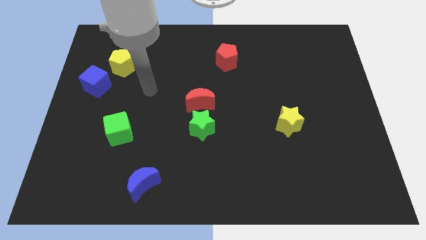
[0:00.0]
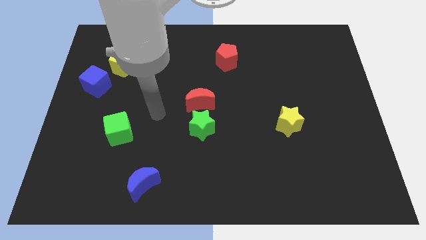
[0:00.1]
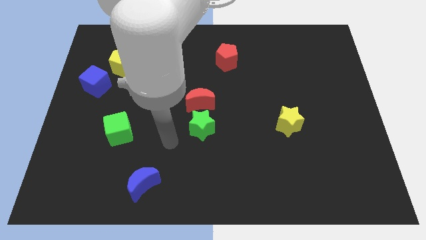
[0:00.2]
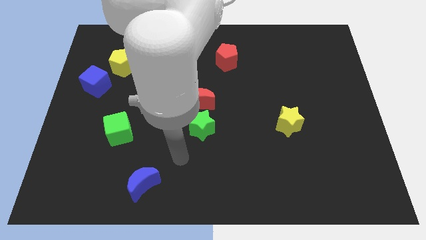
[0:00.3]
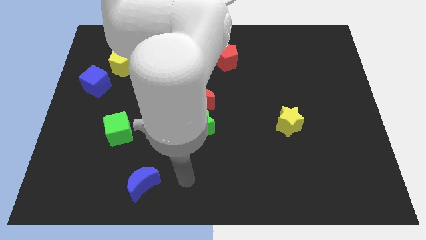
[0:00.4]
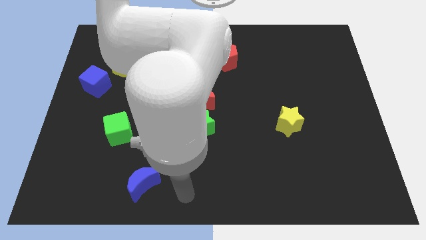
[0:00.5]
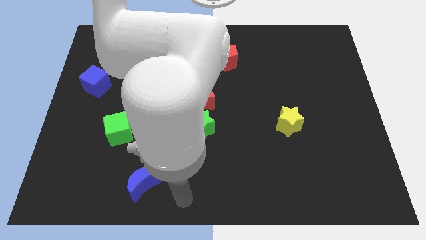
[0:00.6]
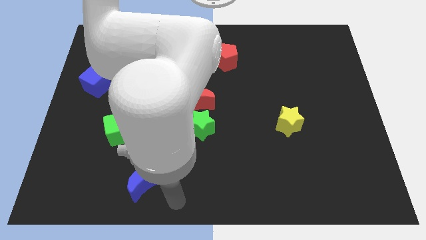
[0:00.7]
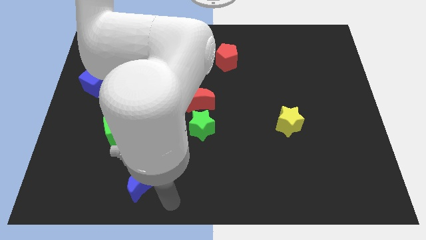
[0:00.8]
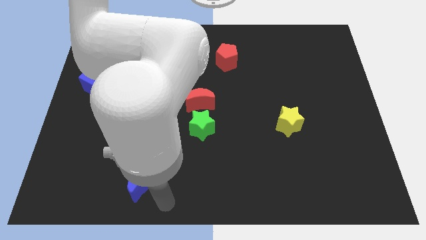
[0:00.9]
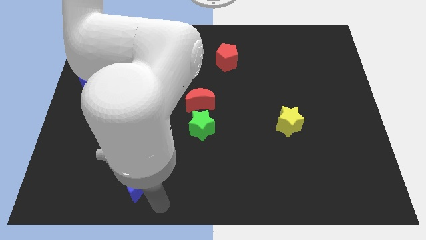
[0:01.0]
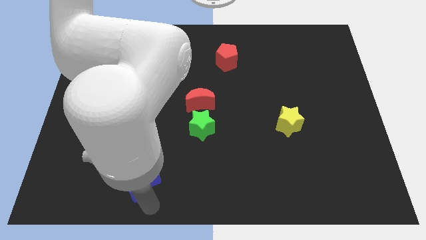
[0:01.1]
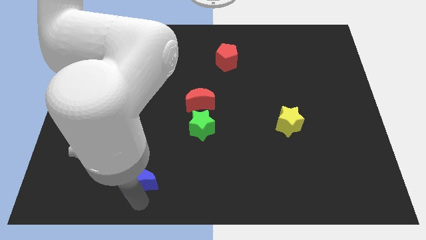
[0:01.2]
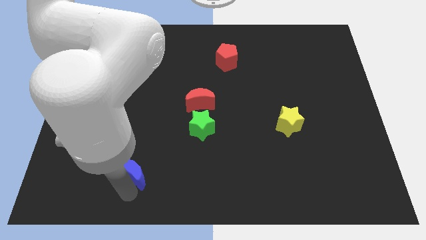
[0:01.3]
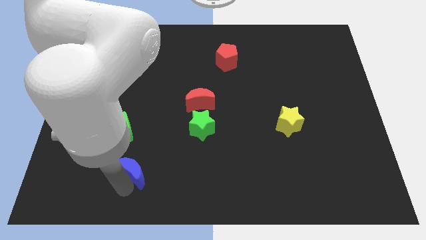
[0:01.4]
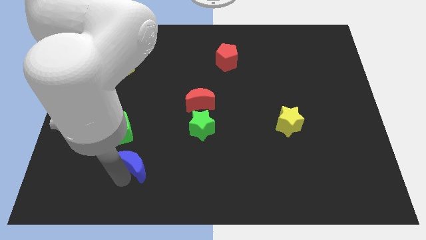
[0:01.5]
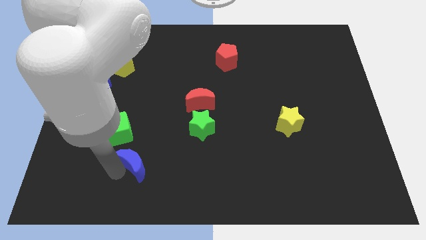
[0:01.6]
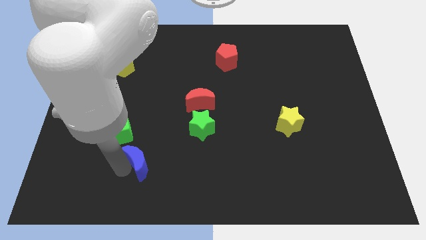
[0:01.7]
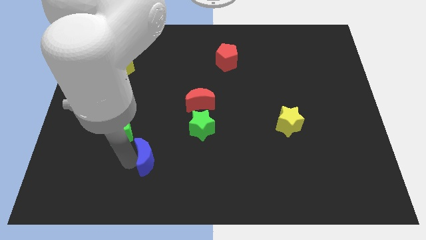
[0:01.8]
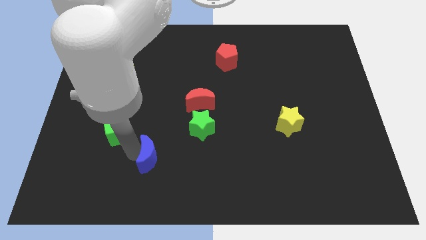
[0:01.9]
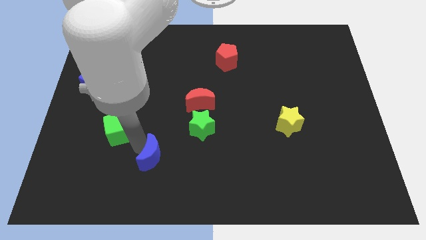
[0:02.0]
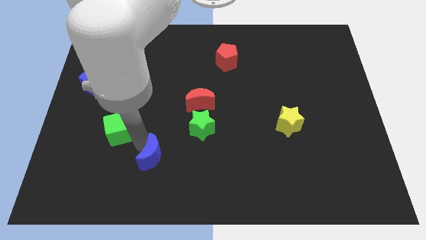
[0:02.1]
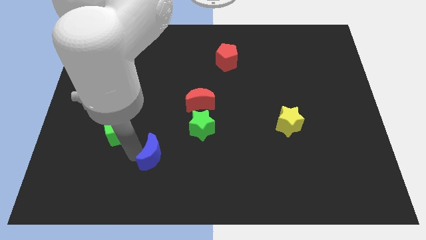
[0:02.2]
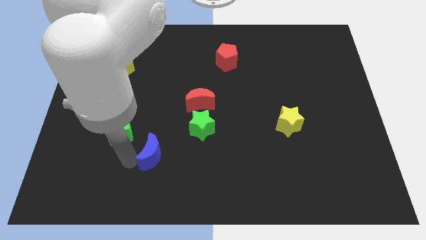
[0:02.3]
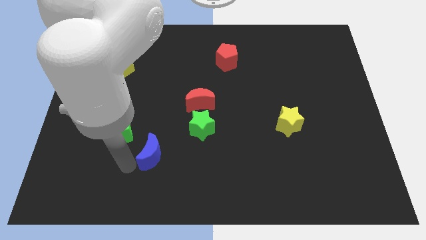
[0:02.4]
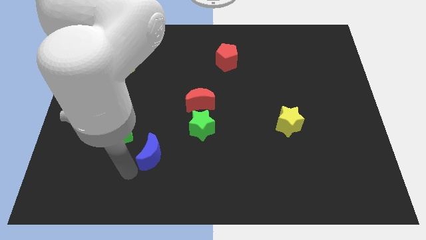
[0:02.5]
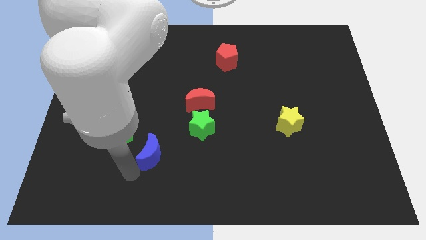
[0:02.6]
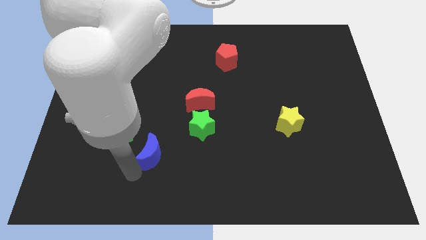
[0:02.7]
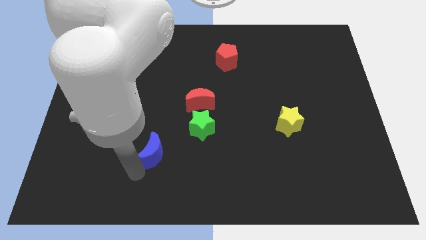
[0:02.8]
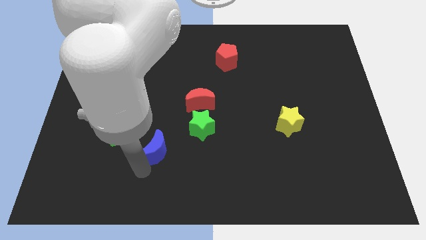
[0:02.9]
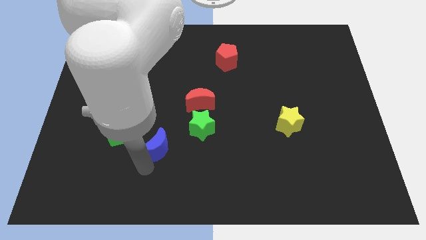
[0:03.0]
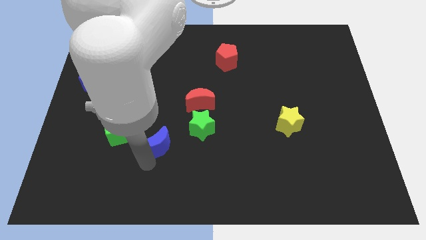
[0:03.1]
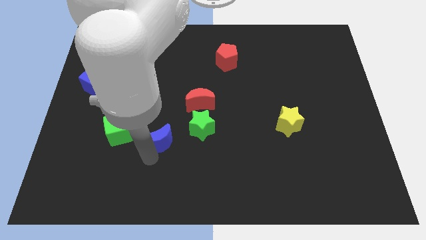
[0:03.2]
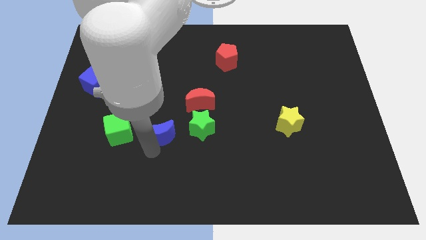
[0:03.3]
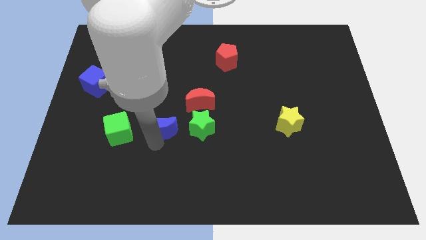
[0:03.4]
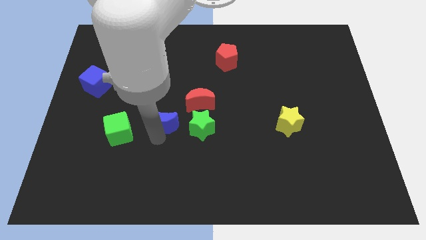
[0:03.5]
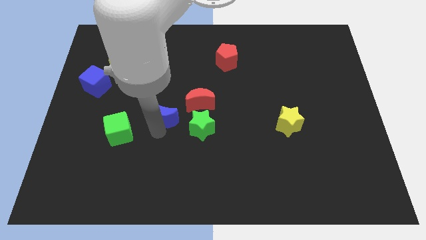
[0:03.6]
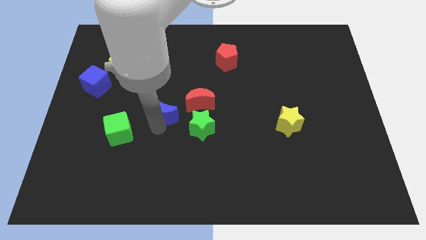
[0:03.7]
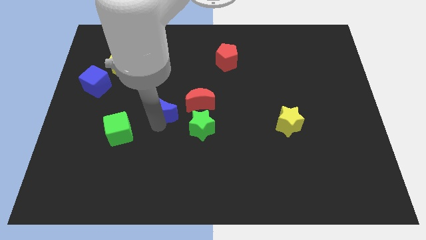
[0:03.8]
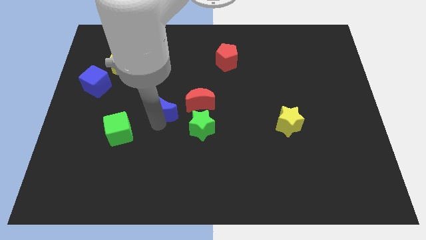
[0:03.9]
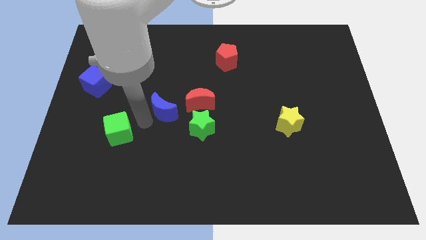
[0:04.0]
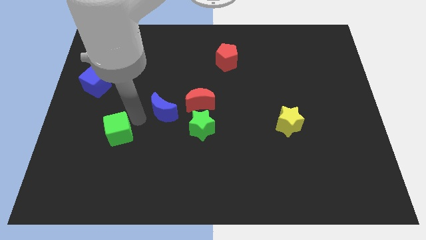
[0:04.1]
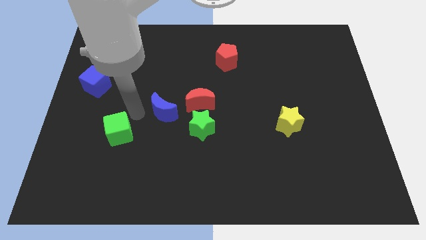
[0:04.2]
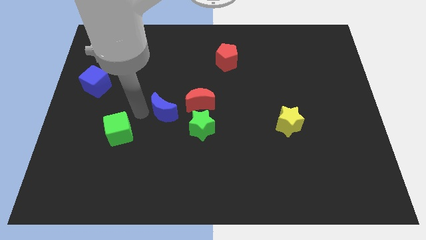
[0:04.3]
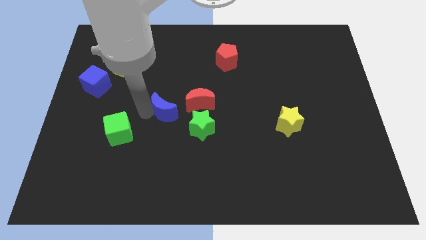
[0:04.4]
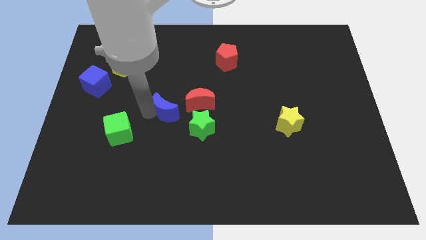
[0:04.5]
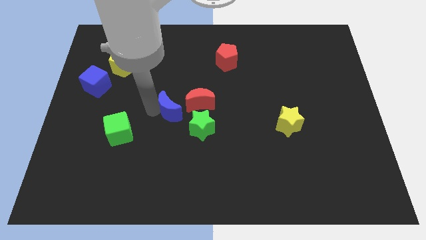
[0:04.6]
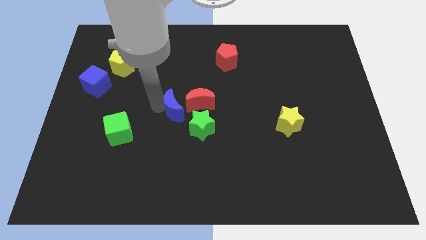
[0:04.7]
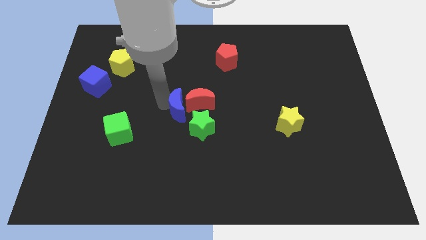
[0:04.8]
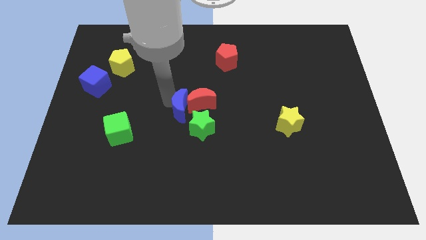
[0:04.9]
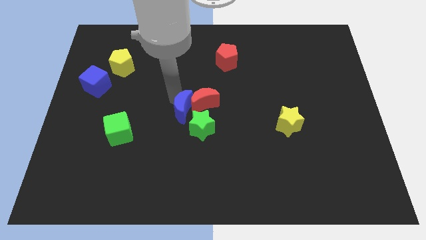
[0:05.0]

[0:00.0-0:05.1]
move the blue moon next to the red moon

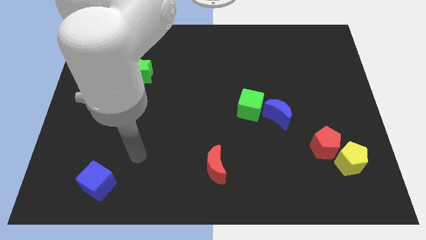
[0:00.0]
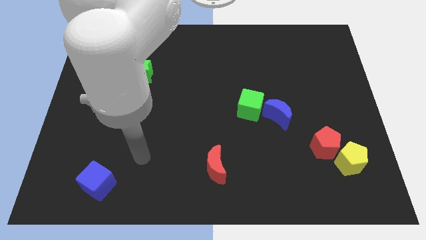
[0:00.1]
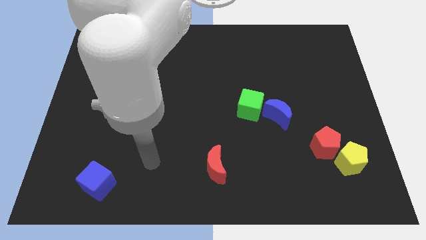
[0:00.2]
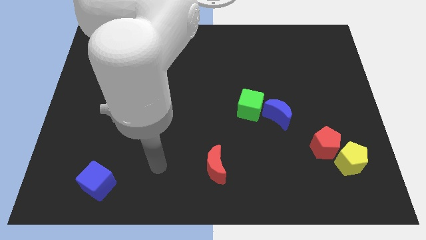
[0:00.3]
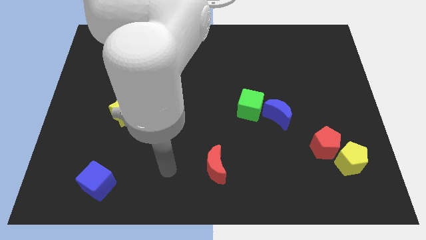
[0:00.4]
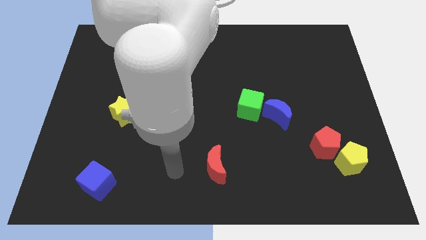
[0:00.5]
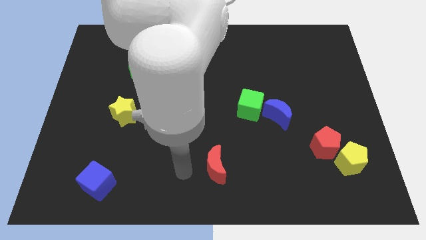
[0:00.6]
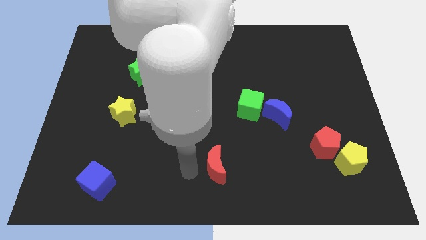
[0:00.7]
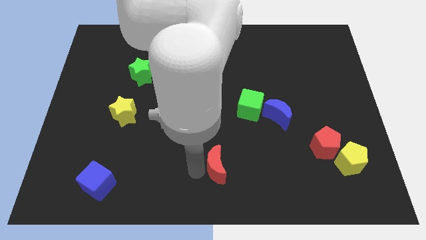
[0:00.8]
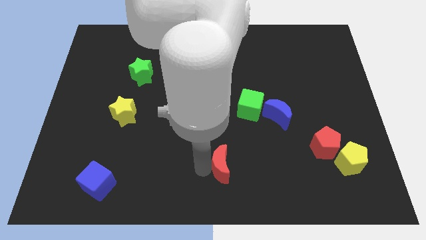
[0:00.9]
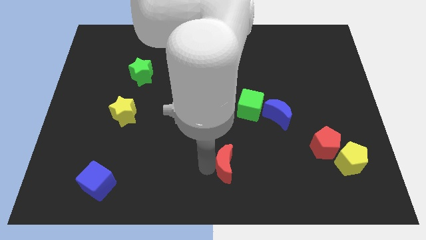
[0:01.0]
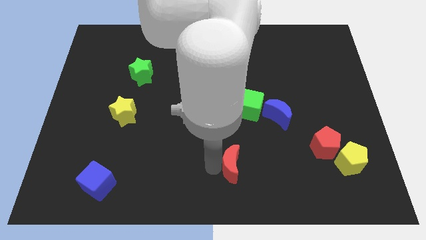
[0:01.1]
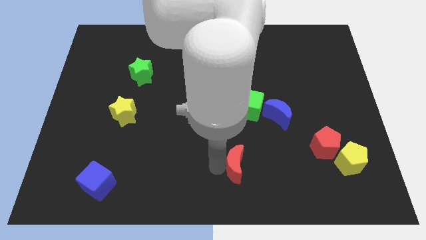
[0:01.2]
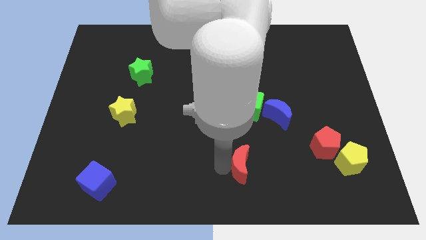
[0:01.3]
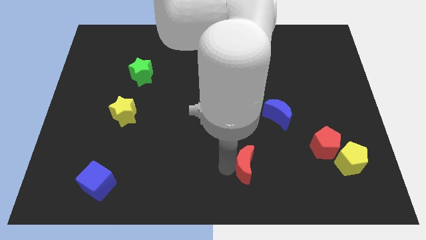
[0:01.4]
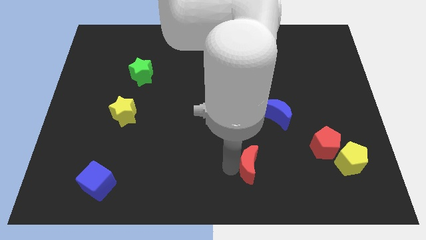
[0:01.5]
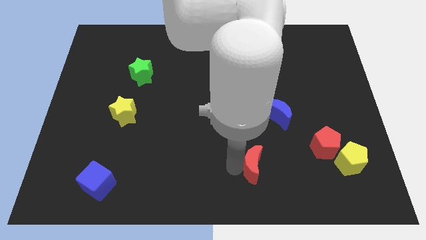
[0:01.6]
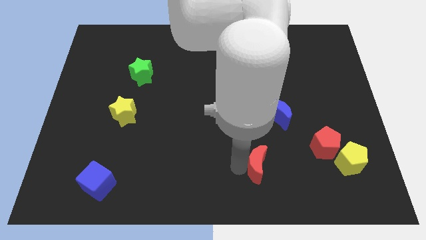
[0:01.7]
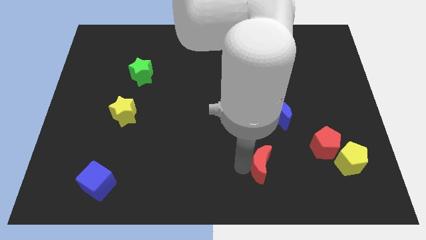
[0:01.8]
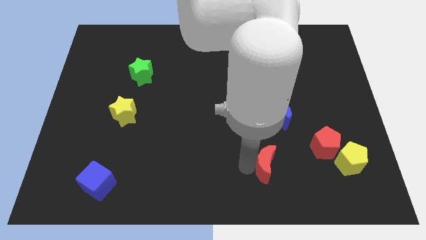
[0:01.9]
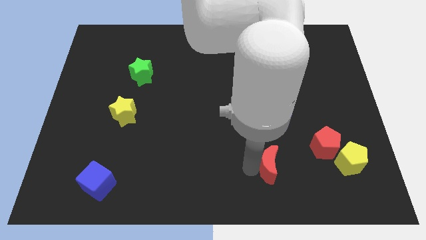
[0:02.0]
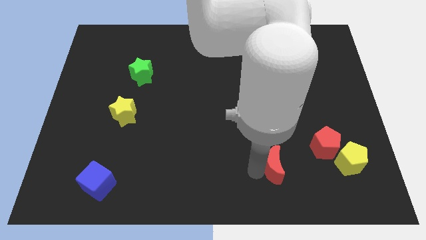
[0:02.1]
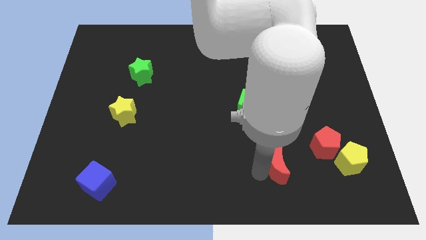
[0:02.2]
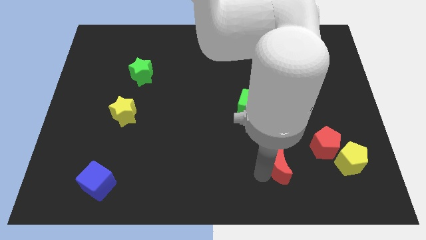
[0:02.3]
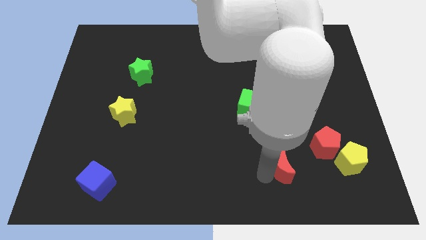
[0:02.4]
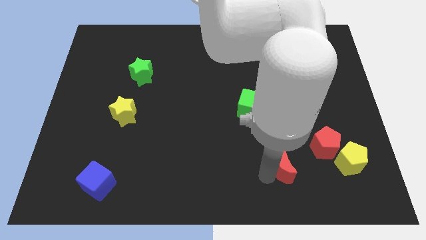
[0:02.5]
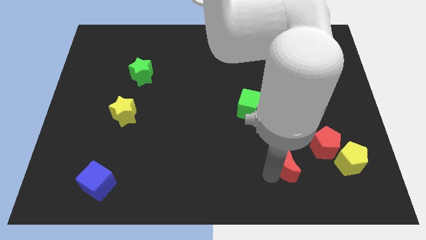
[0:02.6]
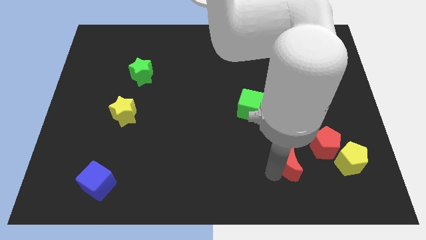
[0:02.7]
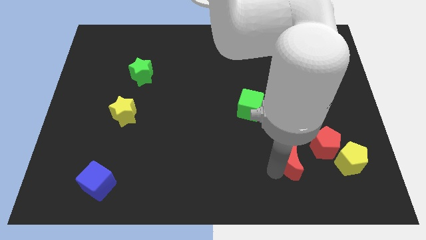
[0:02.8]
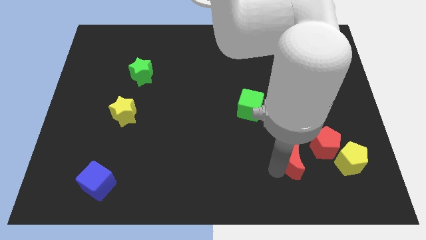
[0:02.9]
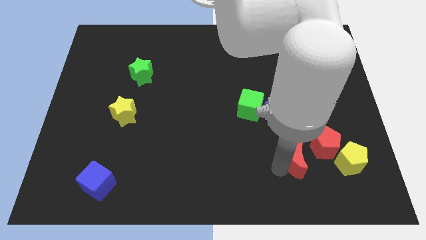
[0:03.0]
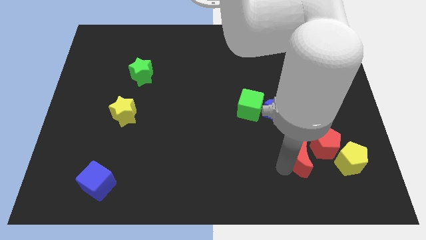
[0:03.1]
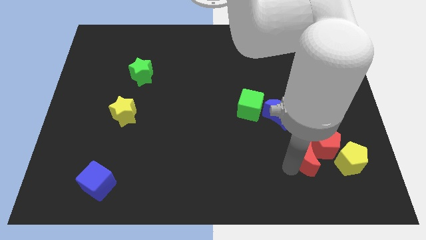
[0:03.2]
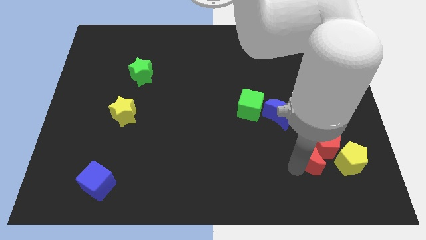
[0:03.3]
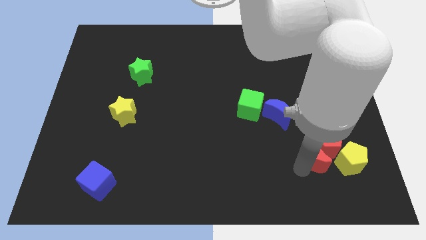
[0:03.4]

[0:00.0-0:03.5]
push the red moon to the red pentagon
